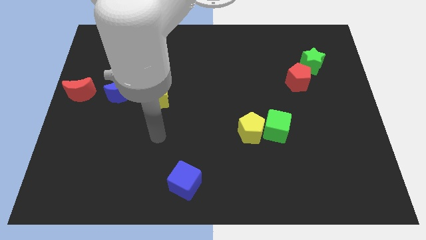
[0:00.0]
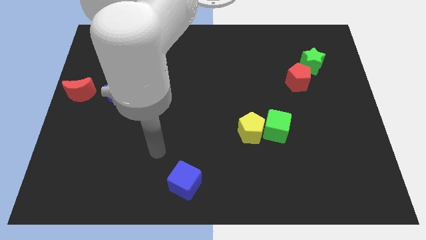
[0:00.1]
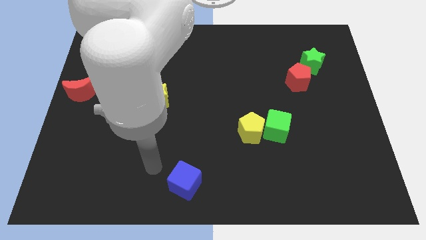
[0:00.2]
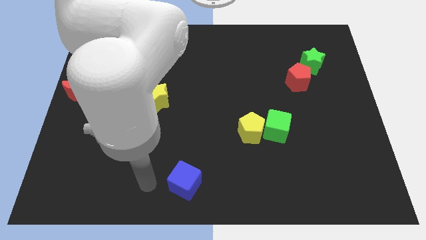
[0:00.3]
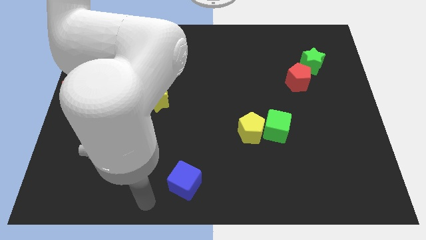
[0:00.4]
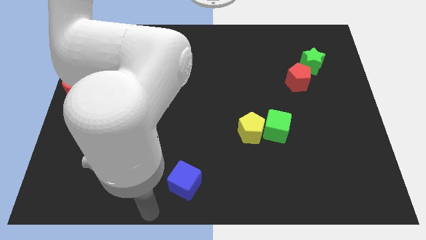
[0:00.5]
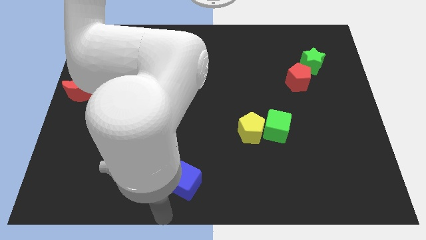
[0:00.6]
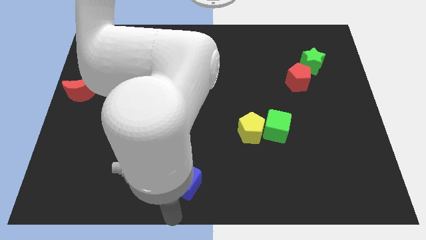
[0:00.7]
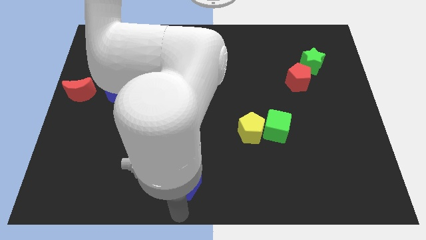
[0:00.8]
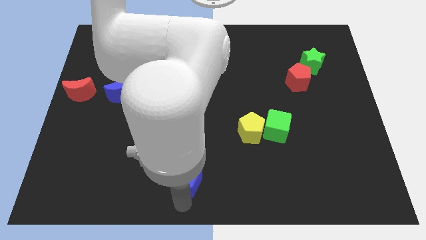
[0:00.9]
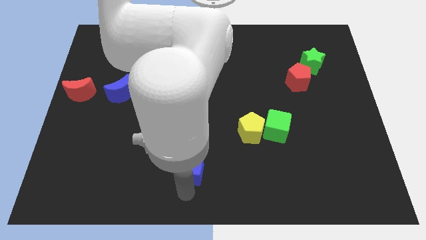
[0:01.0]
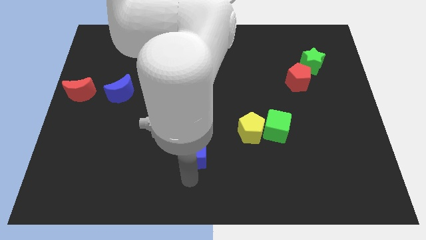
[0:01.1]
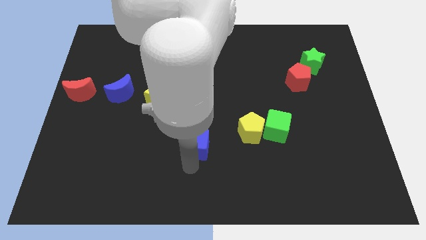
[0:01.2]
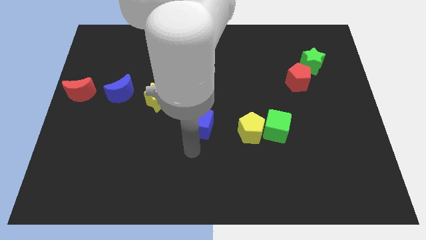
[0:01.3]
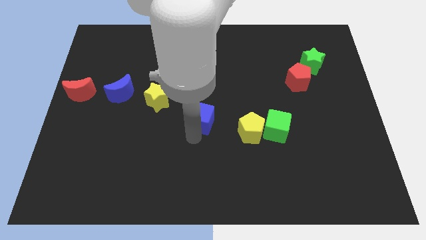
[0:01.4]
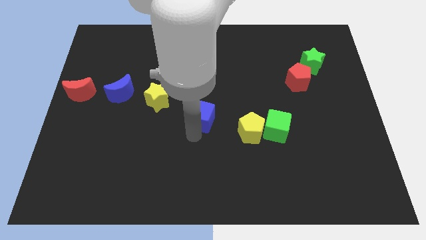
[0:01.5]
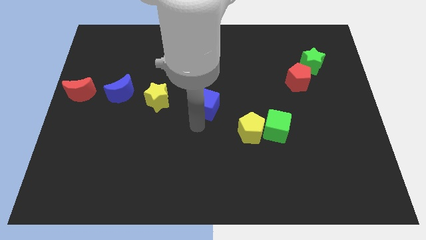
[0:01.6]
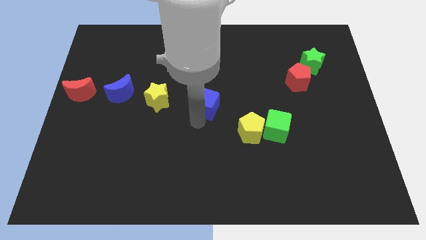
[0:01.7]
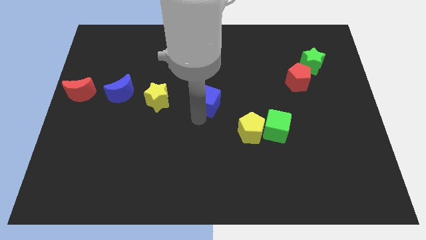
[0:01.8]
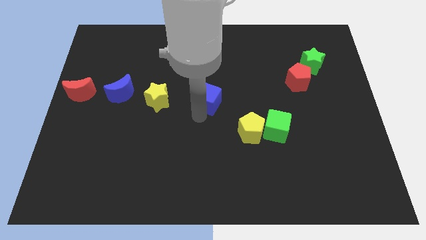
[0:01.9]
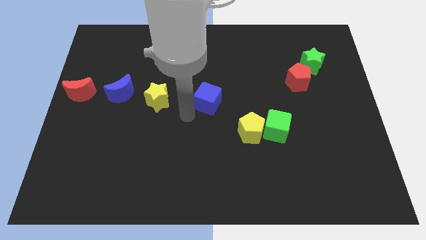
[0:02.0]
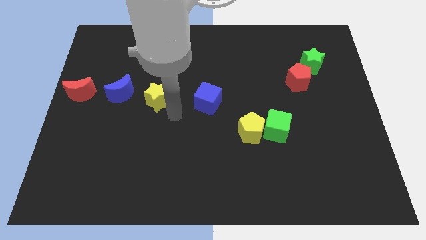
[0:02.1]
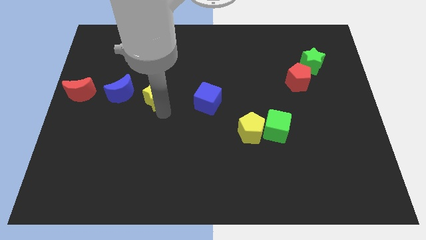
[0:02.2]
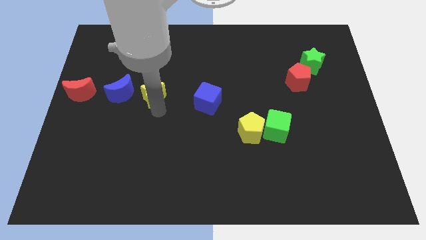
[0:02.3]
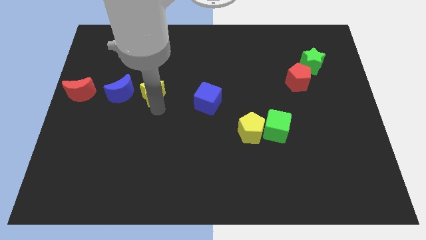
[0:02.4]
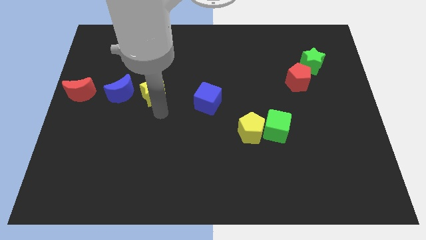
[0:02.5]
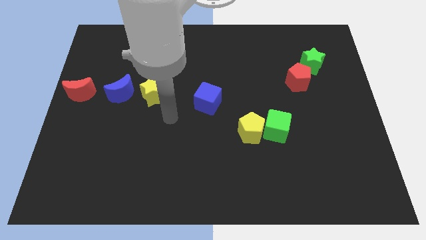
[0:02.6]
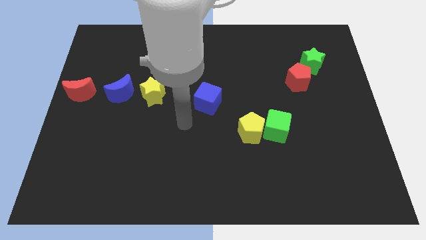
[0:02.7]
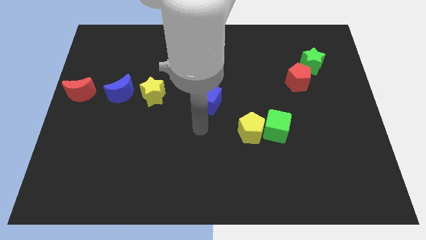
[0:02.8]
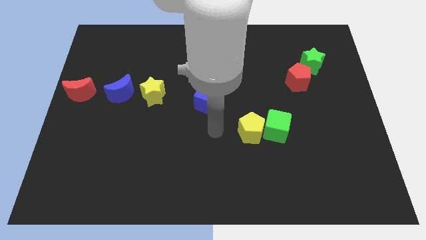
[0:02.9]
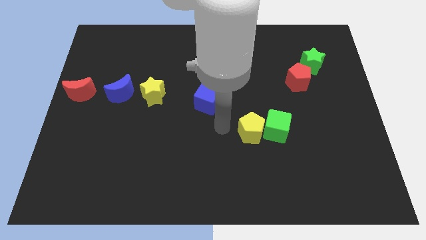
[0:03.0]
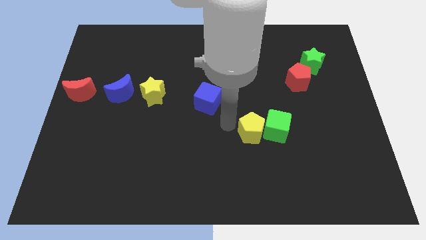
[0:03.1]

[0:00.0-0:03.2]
push the blue cube parallel right to the yellow star

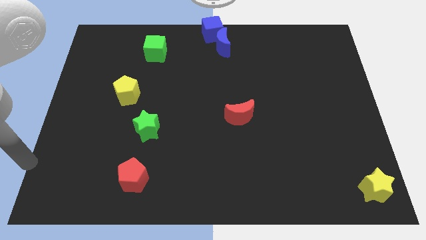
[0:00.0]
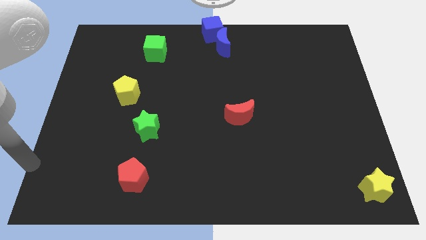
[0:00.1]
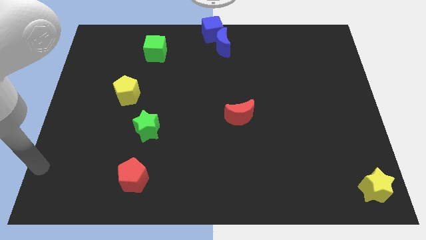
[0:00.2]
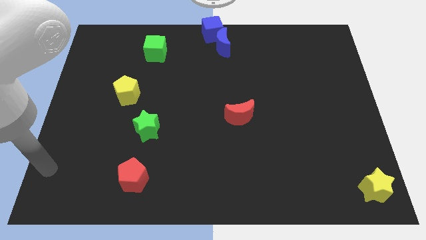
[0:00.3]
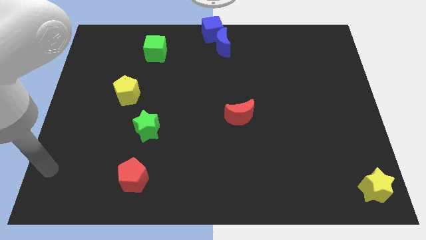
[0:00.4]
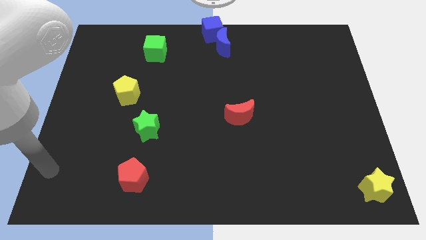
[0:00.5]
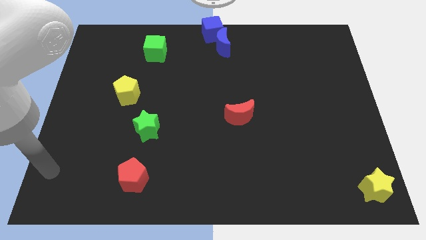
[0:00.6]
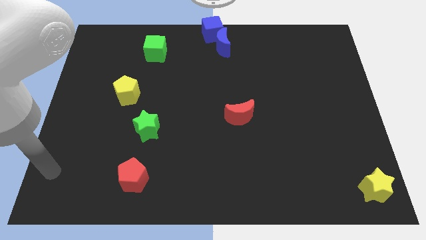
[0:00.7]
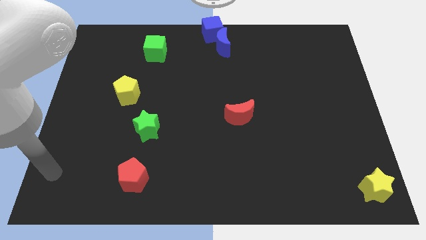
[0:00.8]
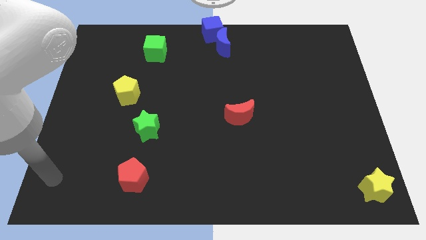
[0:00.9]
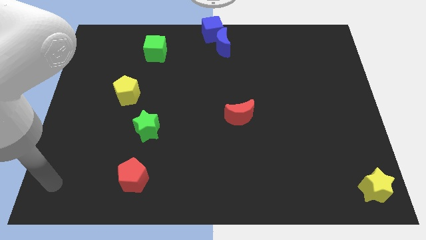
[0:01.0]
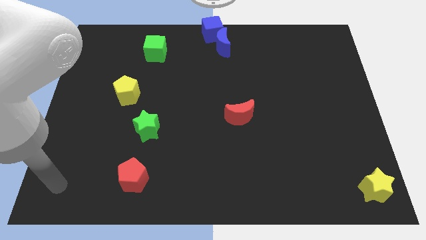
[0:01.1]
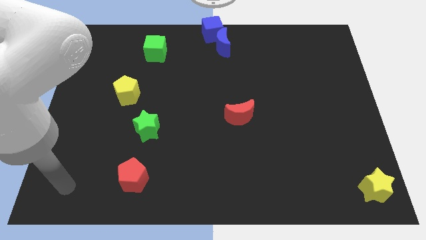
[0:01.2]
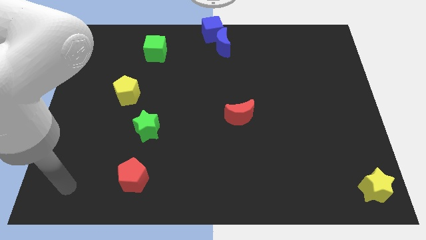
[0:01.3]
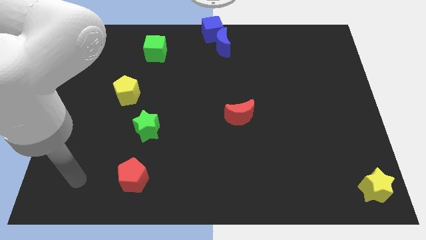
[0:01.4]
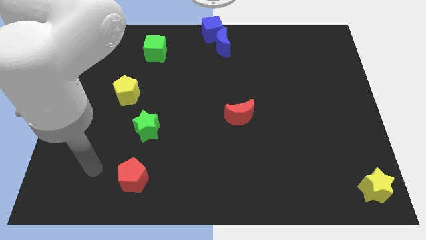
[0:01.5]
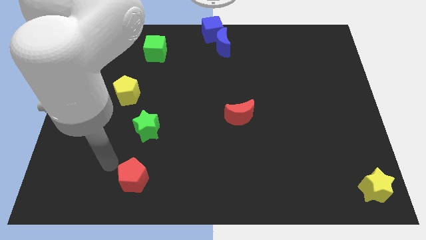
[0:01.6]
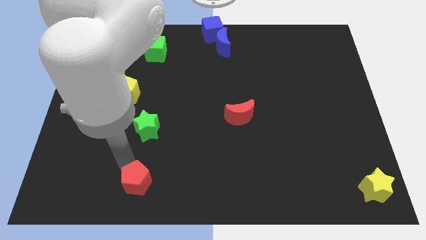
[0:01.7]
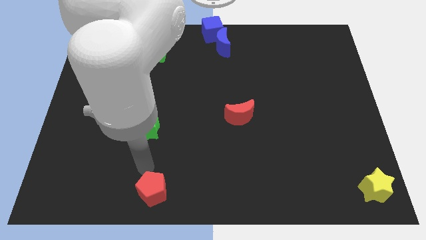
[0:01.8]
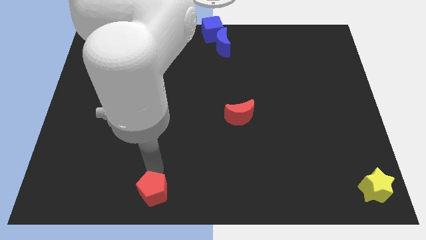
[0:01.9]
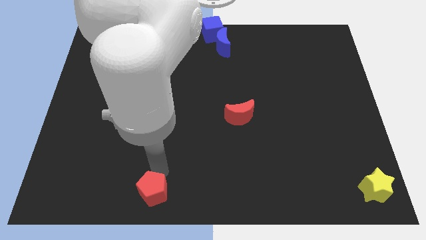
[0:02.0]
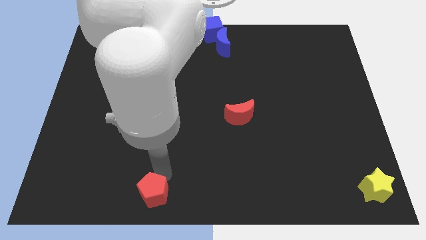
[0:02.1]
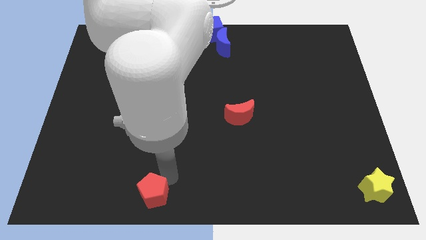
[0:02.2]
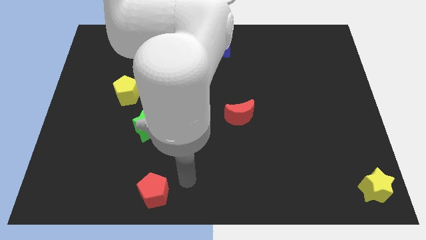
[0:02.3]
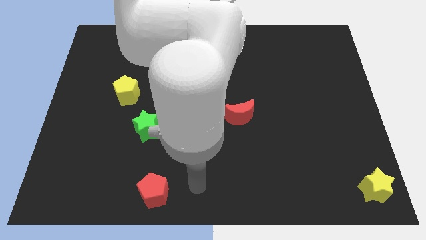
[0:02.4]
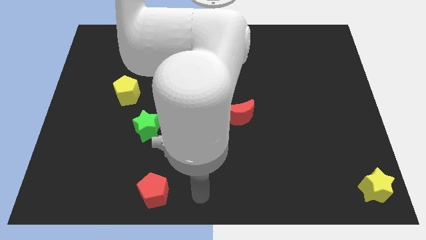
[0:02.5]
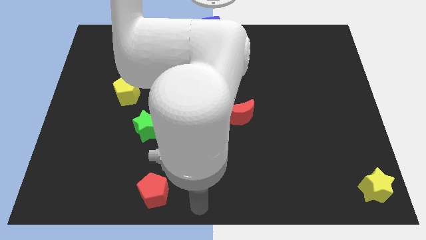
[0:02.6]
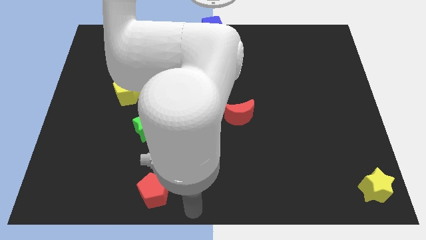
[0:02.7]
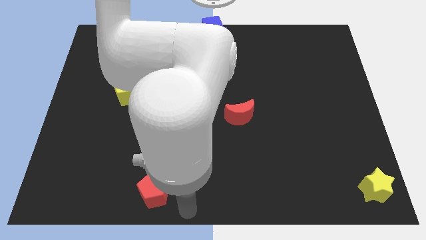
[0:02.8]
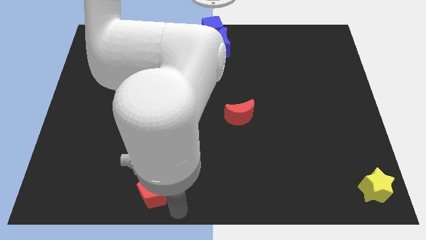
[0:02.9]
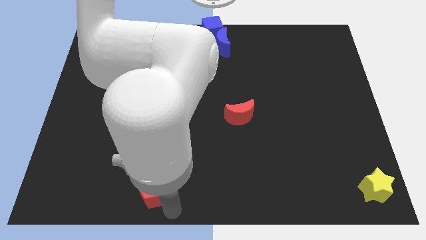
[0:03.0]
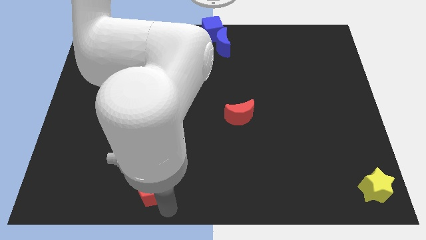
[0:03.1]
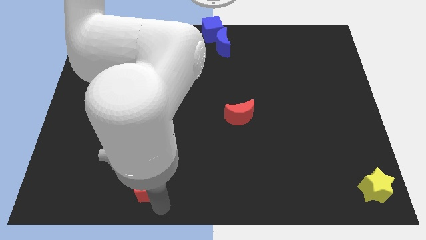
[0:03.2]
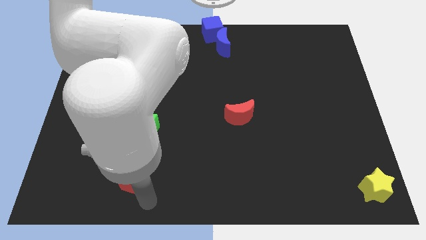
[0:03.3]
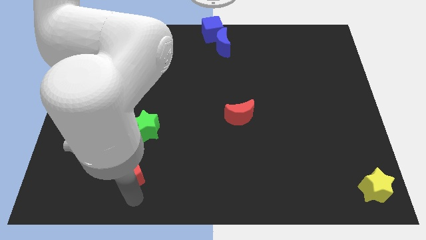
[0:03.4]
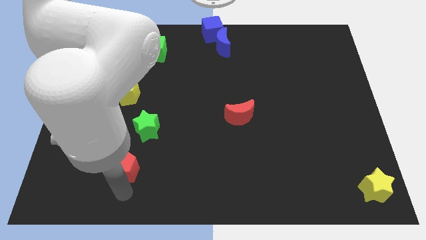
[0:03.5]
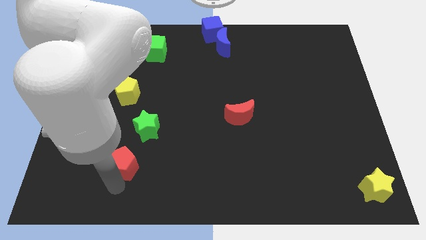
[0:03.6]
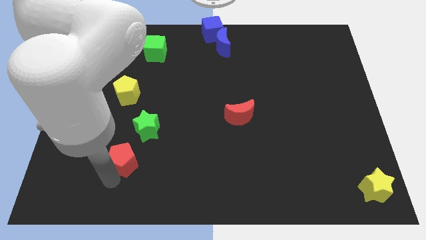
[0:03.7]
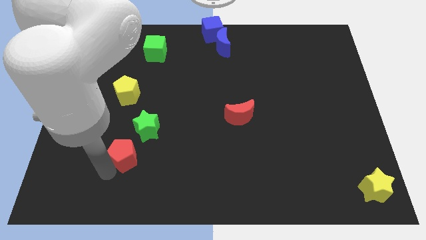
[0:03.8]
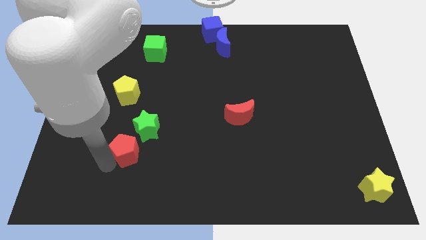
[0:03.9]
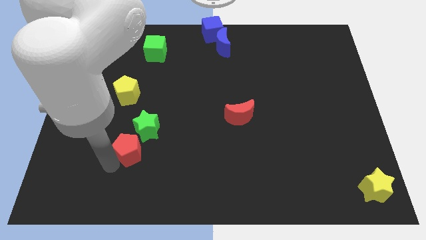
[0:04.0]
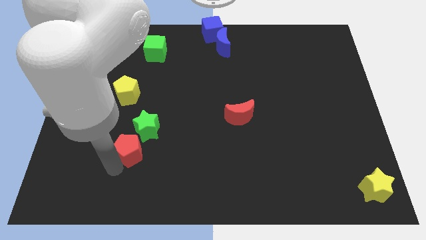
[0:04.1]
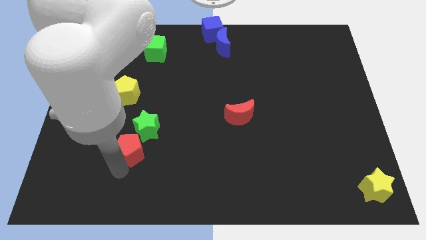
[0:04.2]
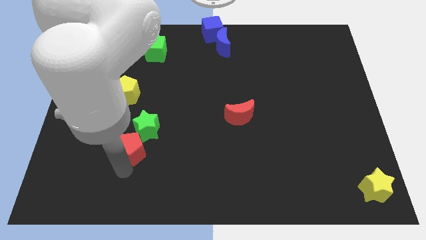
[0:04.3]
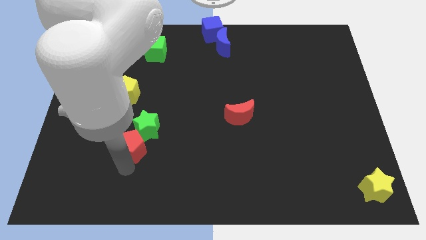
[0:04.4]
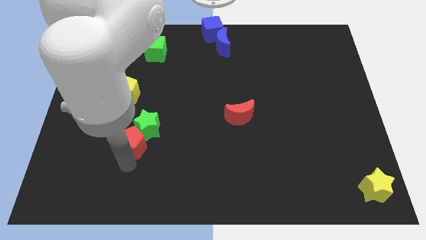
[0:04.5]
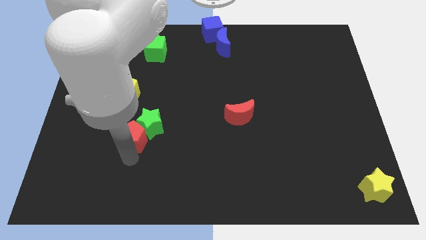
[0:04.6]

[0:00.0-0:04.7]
move the red pentagon close to the green star

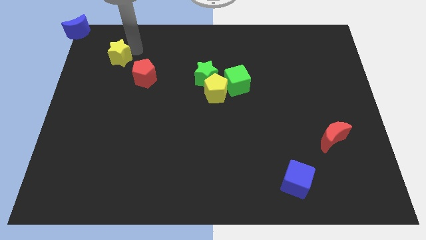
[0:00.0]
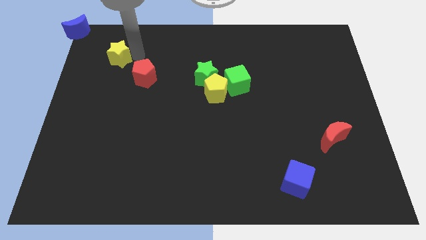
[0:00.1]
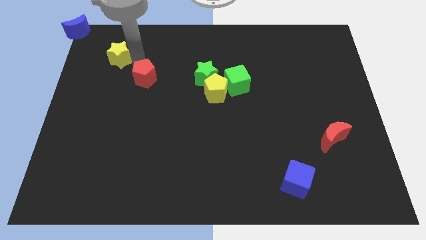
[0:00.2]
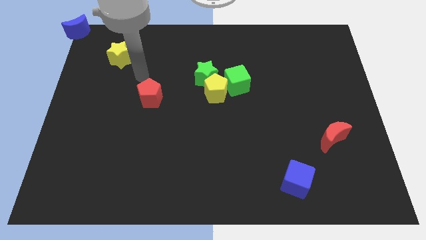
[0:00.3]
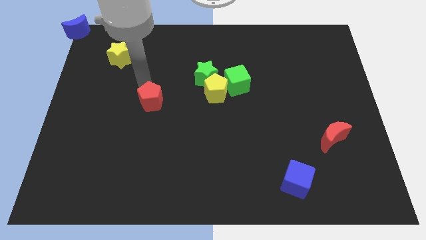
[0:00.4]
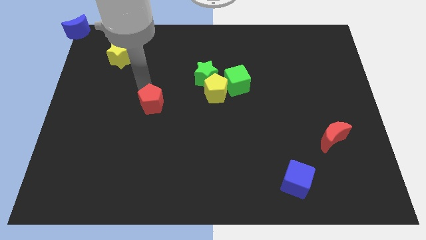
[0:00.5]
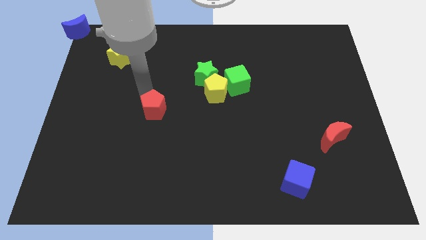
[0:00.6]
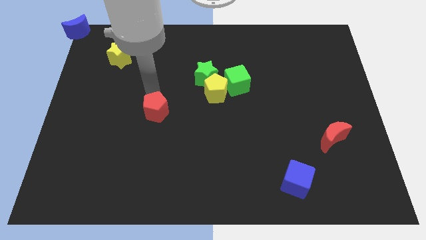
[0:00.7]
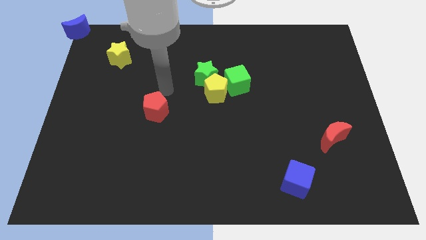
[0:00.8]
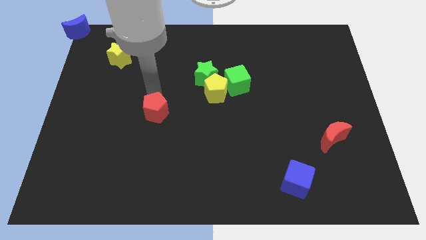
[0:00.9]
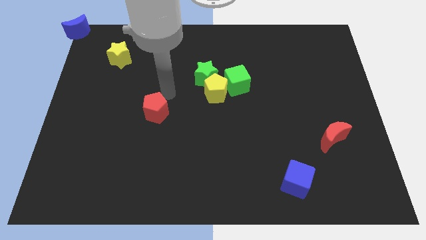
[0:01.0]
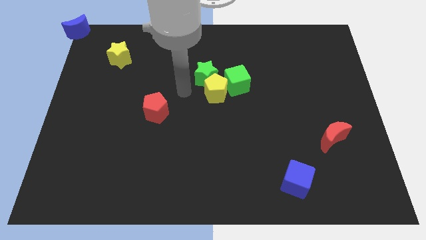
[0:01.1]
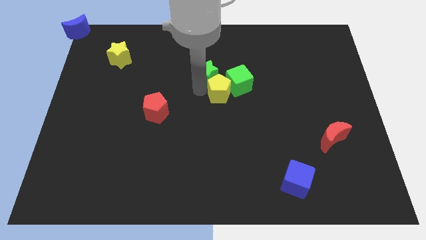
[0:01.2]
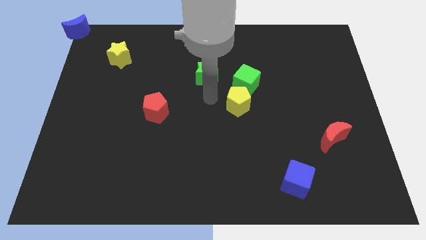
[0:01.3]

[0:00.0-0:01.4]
slightly move the red pentagon towards down
